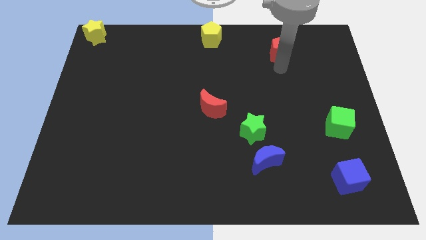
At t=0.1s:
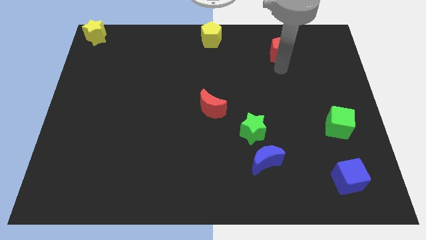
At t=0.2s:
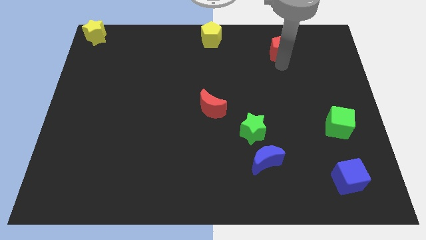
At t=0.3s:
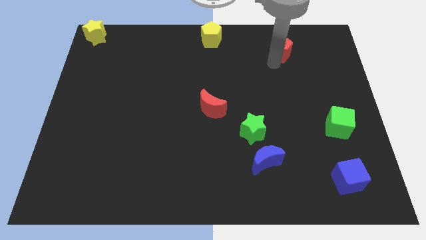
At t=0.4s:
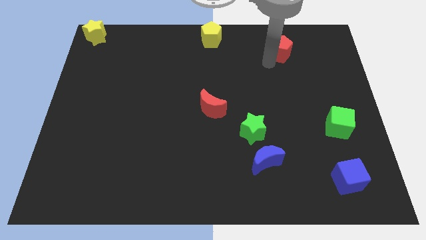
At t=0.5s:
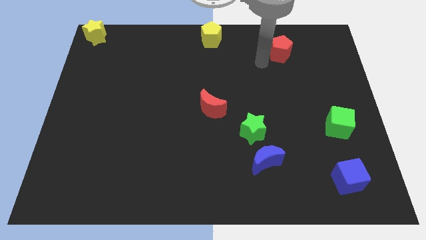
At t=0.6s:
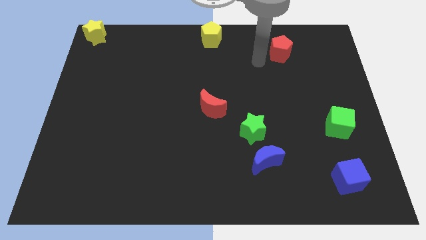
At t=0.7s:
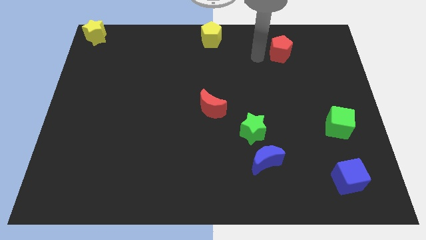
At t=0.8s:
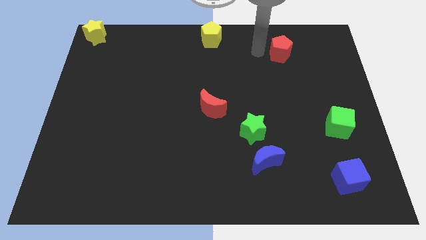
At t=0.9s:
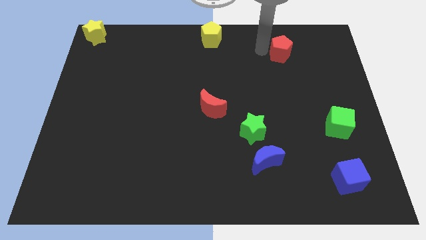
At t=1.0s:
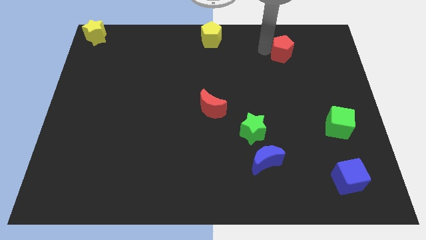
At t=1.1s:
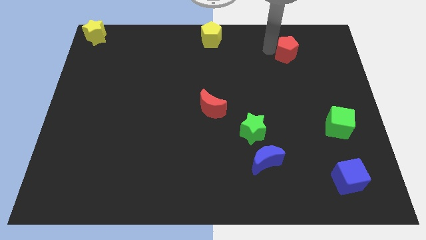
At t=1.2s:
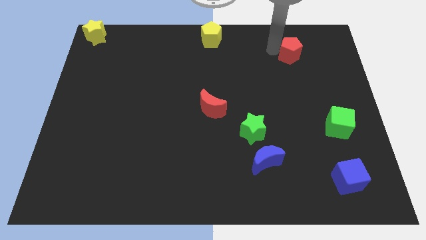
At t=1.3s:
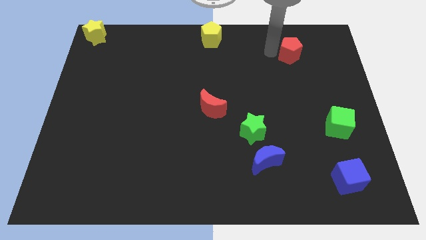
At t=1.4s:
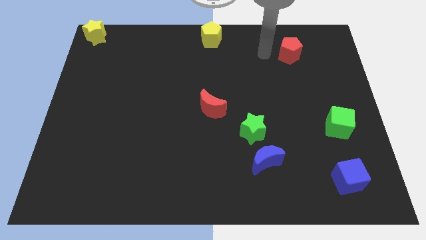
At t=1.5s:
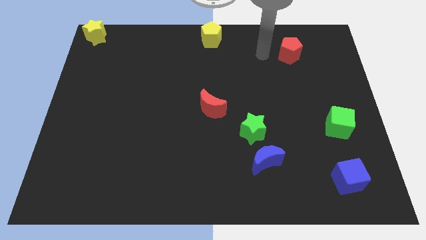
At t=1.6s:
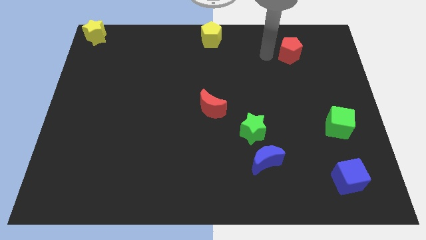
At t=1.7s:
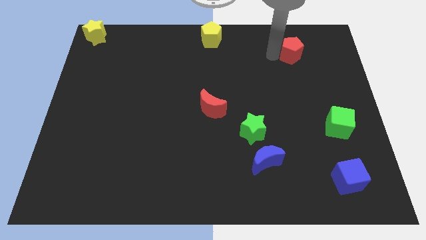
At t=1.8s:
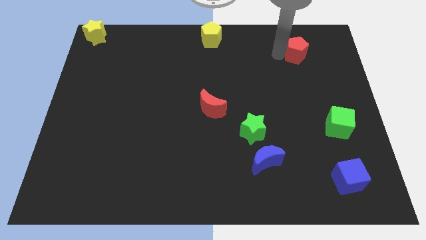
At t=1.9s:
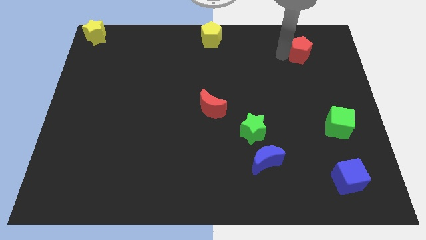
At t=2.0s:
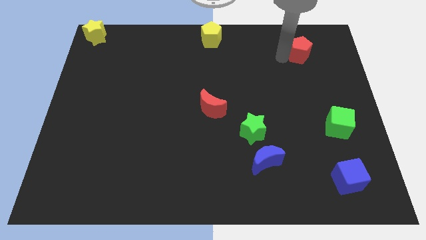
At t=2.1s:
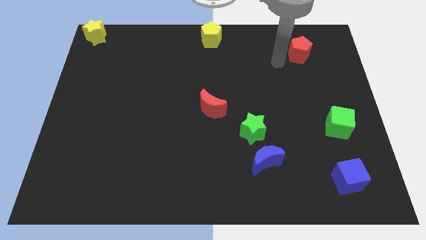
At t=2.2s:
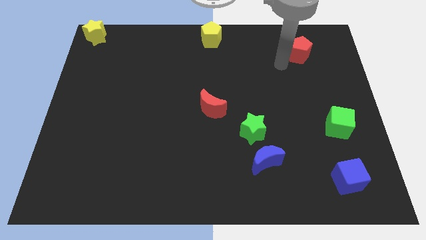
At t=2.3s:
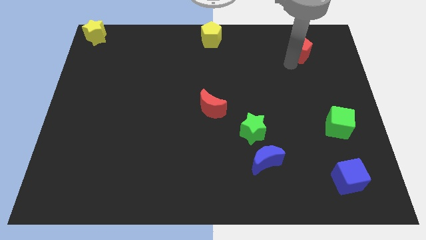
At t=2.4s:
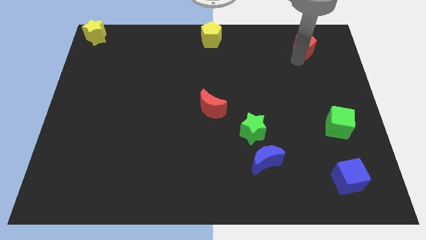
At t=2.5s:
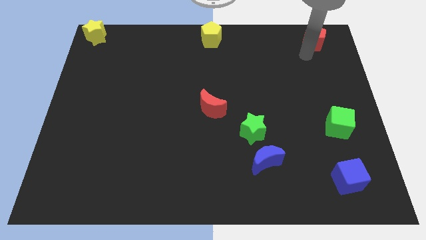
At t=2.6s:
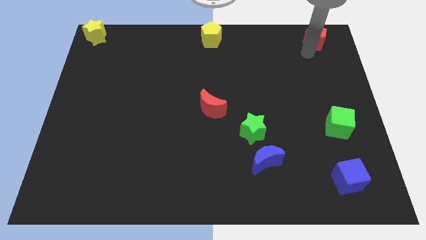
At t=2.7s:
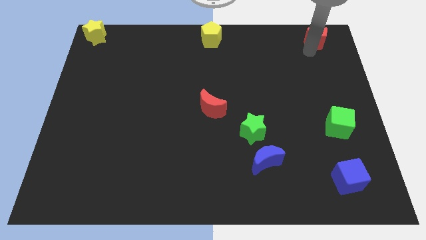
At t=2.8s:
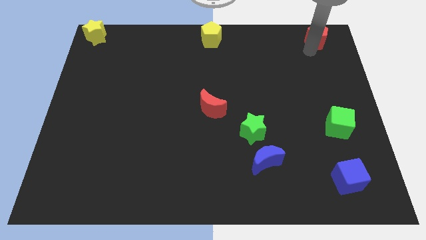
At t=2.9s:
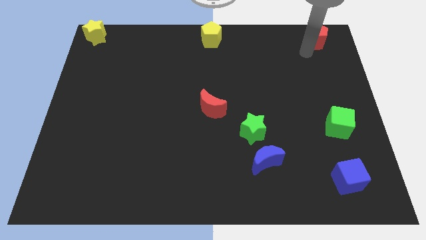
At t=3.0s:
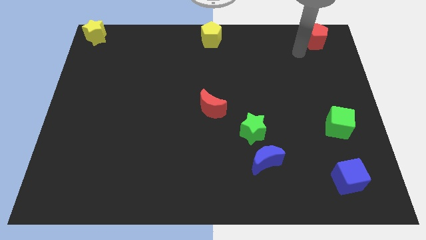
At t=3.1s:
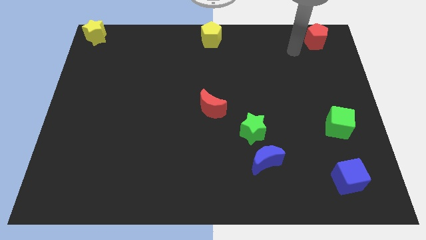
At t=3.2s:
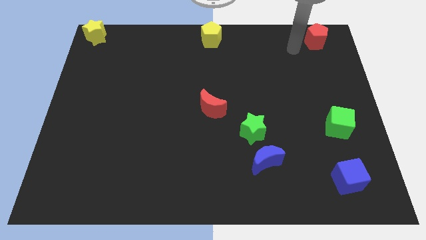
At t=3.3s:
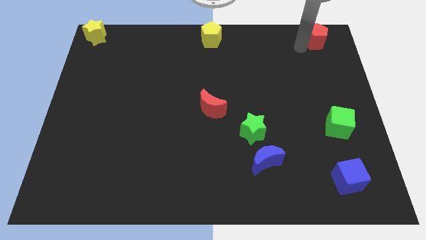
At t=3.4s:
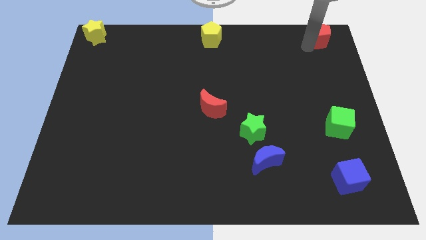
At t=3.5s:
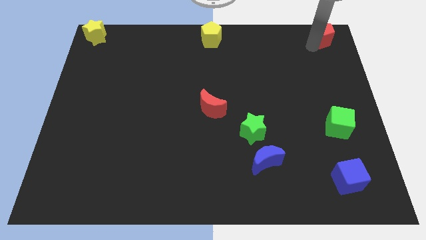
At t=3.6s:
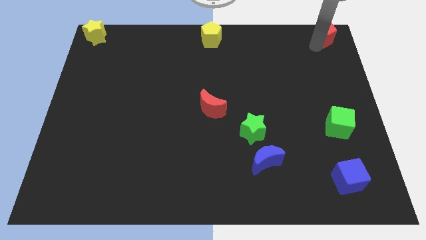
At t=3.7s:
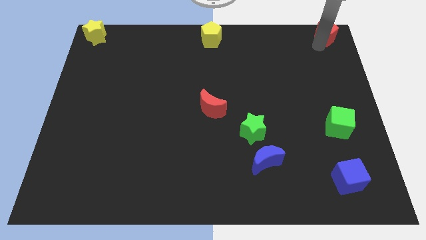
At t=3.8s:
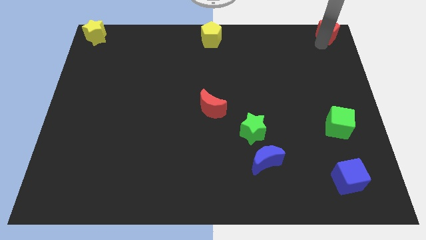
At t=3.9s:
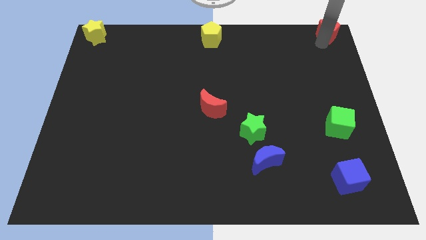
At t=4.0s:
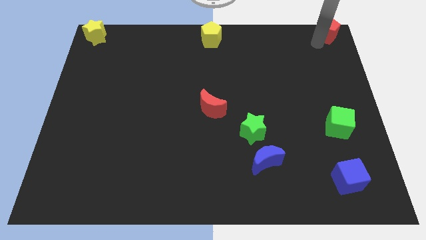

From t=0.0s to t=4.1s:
move the red pentagon to the top right corner of board

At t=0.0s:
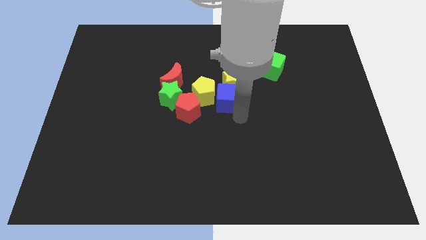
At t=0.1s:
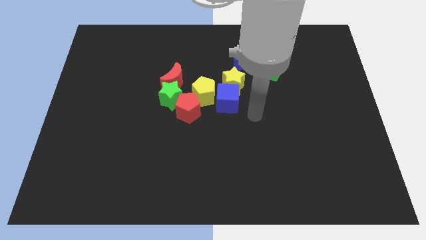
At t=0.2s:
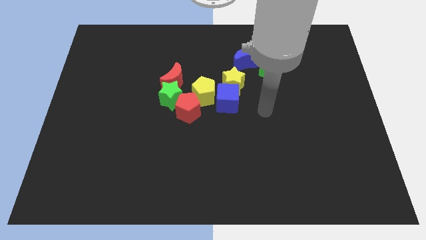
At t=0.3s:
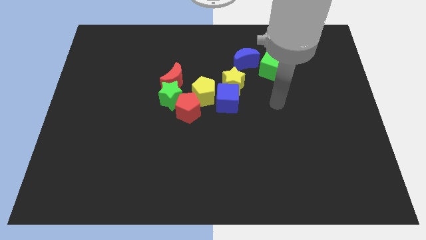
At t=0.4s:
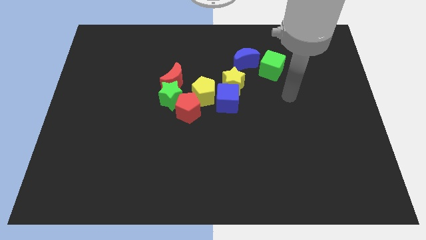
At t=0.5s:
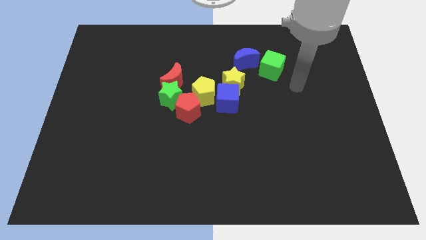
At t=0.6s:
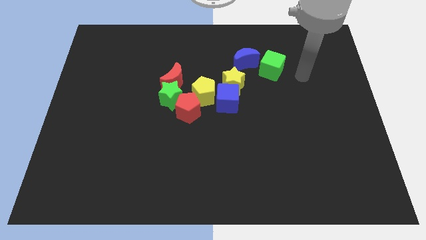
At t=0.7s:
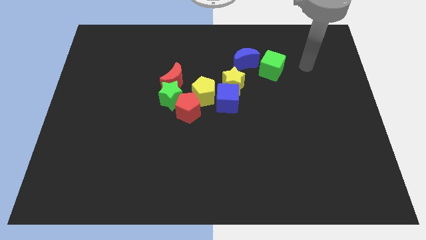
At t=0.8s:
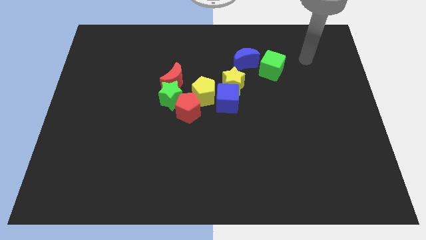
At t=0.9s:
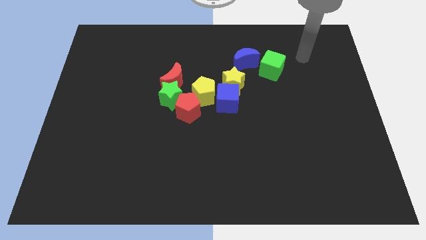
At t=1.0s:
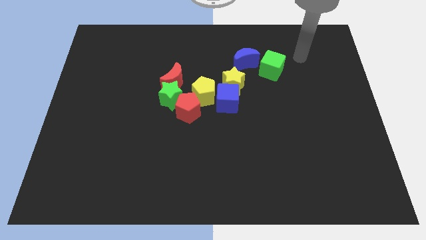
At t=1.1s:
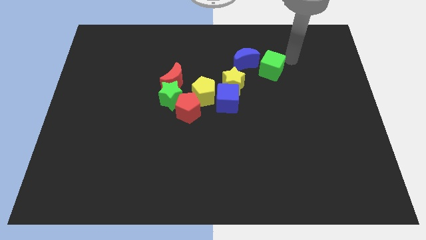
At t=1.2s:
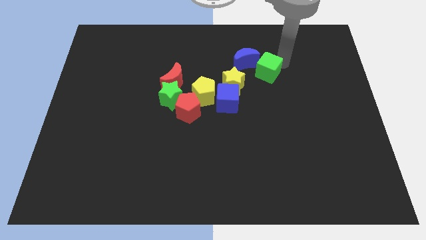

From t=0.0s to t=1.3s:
go near the green cube

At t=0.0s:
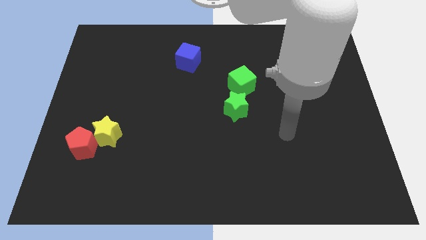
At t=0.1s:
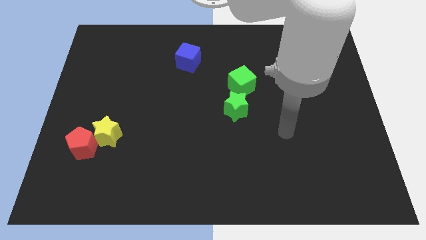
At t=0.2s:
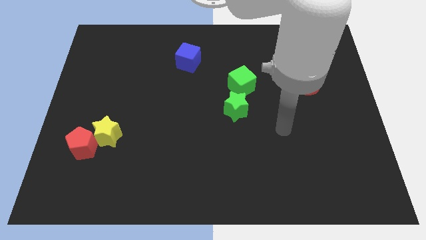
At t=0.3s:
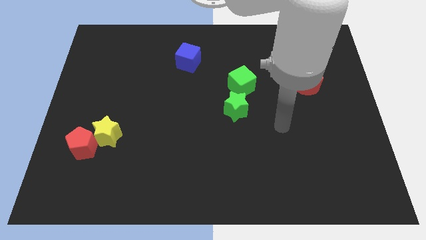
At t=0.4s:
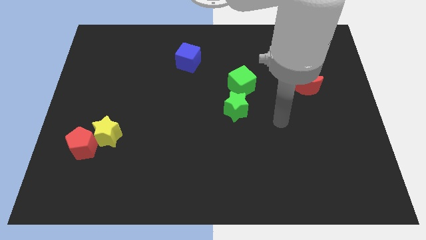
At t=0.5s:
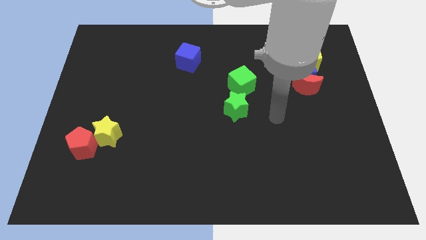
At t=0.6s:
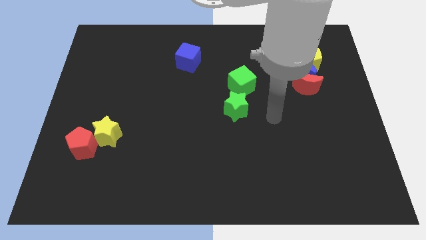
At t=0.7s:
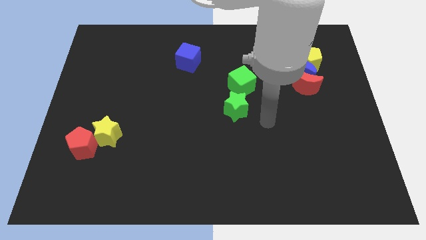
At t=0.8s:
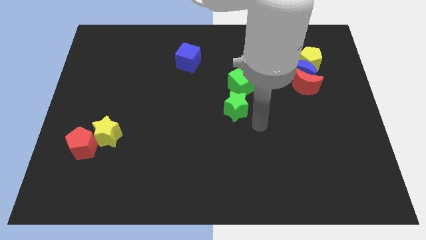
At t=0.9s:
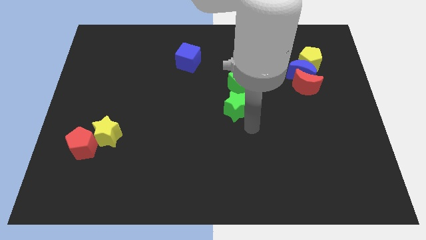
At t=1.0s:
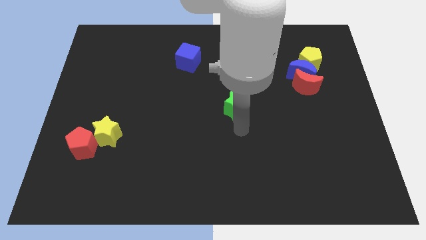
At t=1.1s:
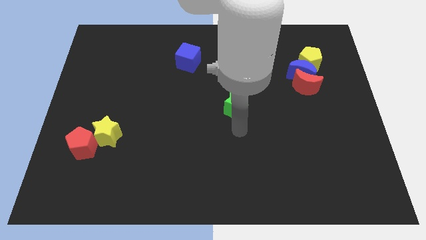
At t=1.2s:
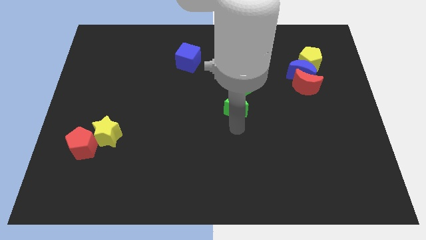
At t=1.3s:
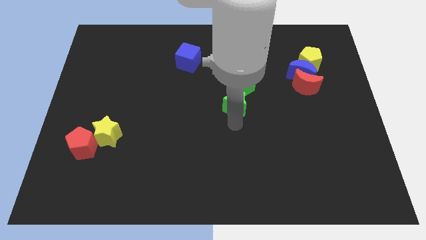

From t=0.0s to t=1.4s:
move the arm towards green star

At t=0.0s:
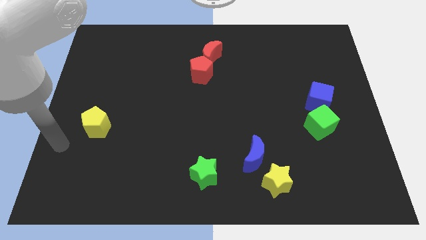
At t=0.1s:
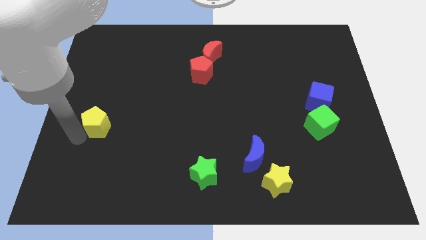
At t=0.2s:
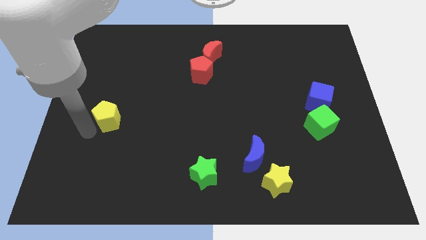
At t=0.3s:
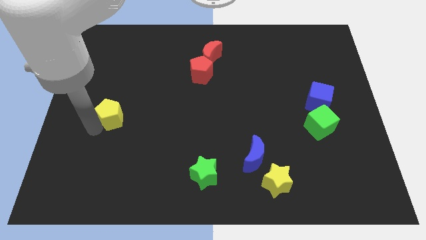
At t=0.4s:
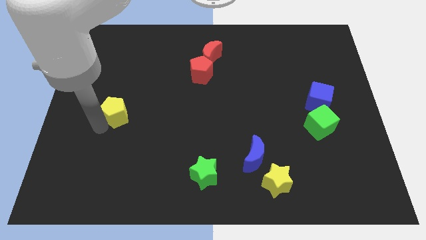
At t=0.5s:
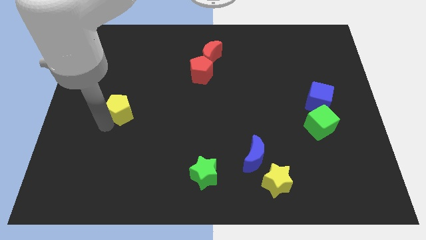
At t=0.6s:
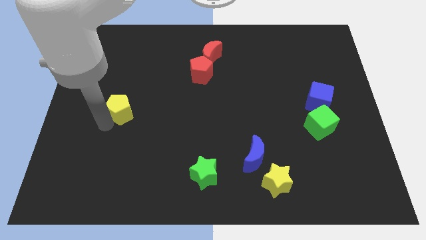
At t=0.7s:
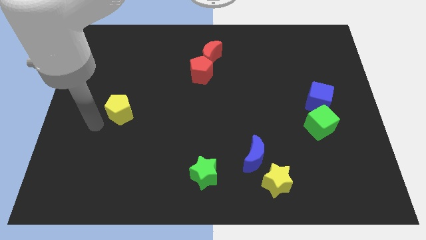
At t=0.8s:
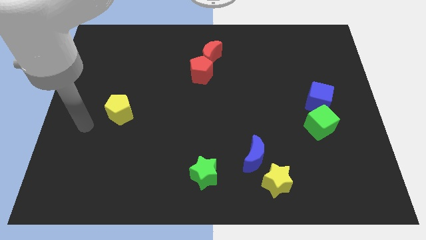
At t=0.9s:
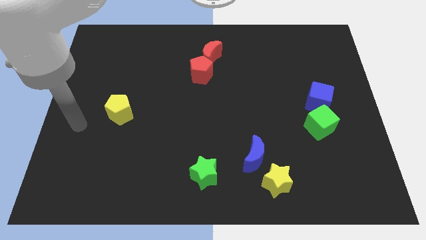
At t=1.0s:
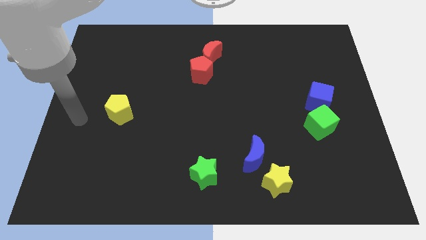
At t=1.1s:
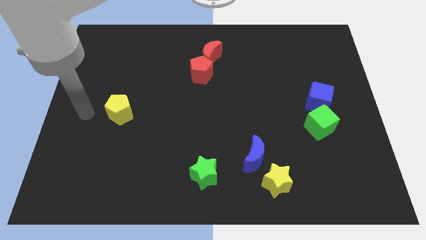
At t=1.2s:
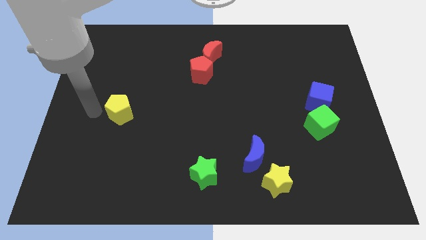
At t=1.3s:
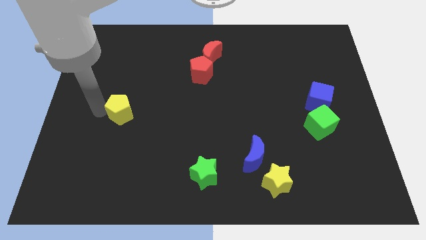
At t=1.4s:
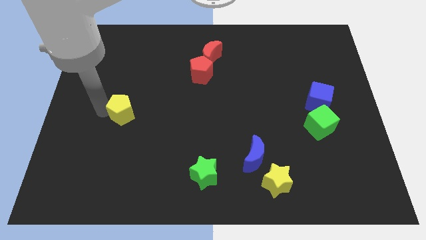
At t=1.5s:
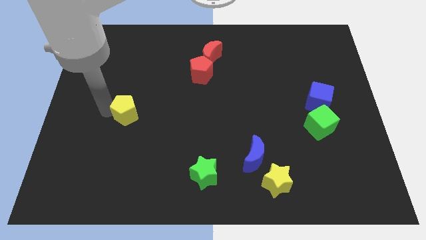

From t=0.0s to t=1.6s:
move the yellow pentagon to the top of the board

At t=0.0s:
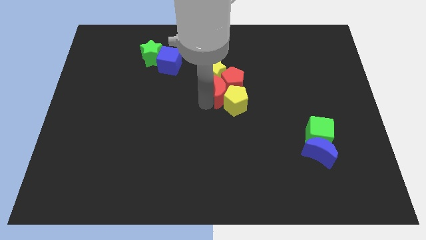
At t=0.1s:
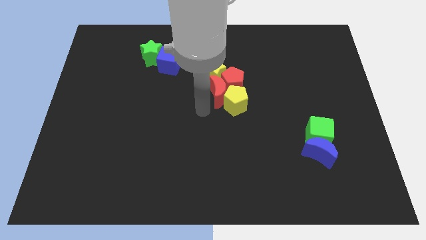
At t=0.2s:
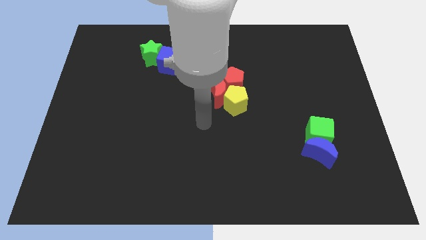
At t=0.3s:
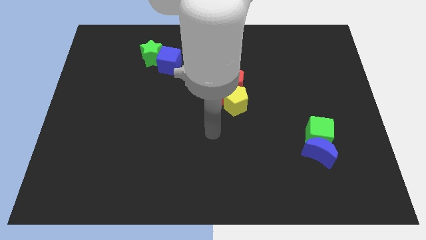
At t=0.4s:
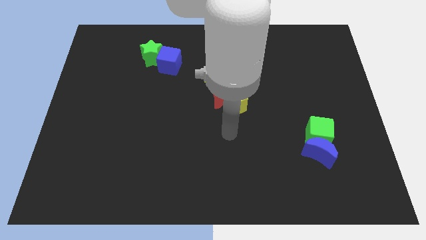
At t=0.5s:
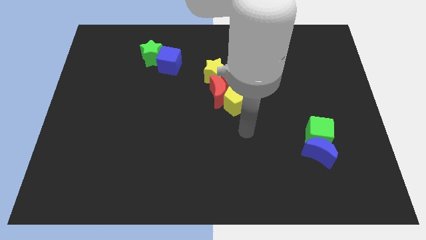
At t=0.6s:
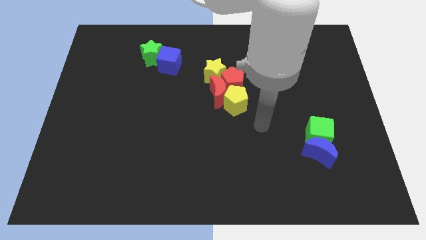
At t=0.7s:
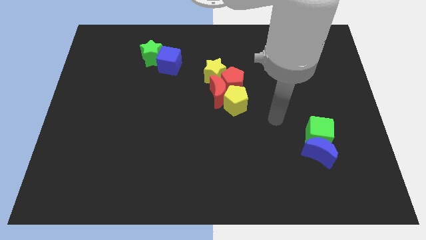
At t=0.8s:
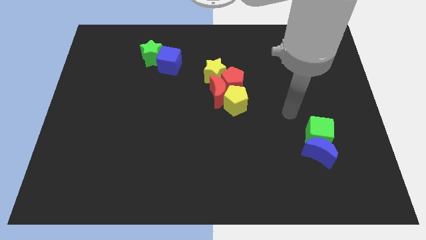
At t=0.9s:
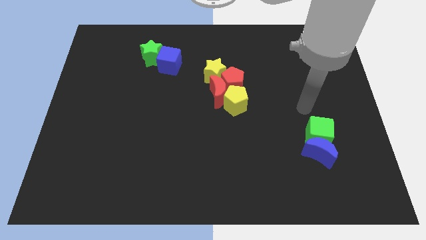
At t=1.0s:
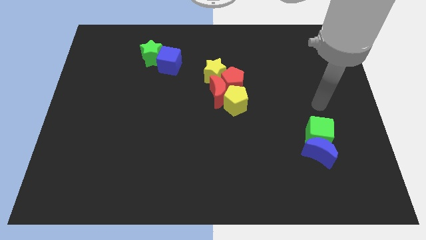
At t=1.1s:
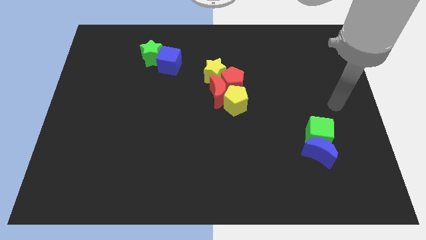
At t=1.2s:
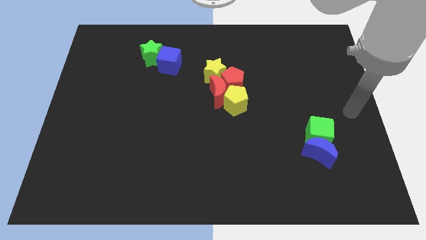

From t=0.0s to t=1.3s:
move your arm away from the red moon
